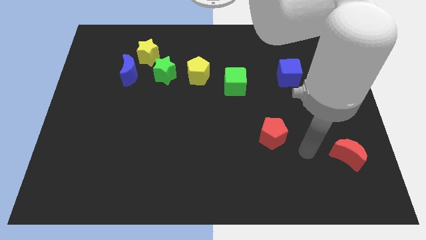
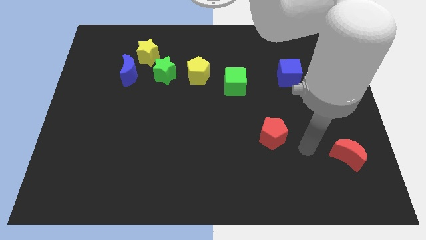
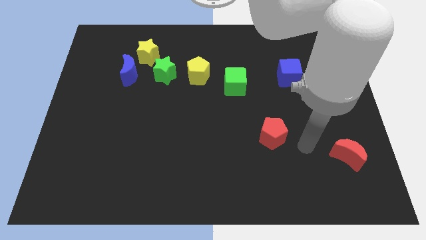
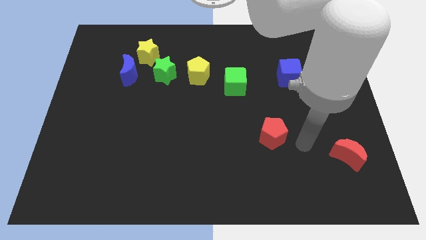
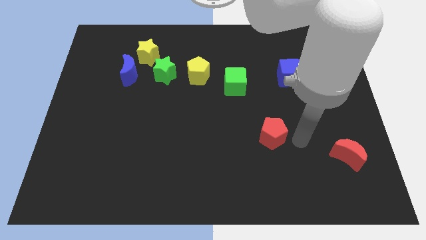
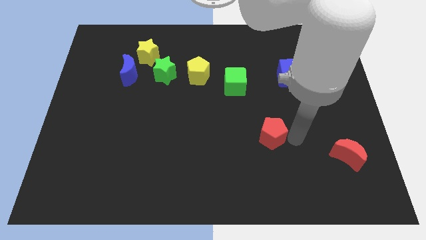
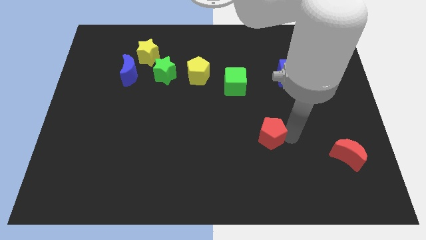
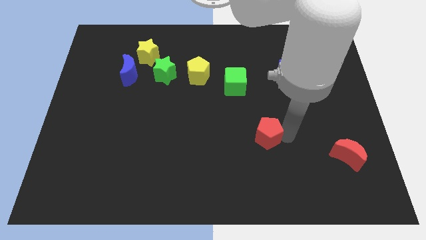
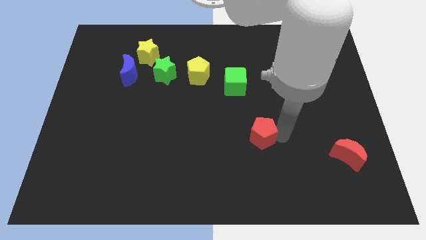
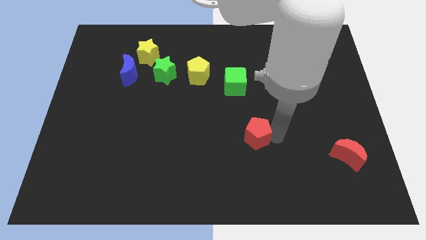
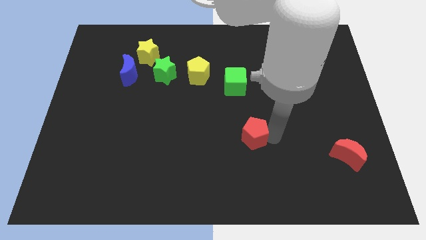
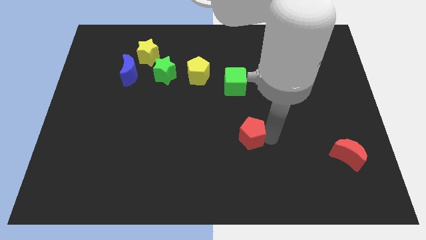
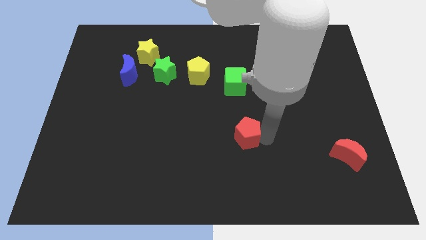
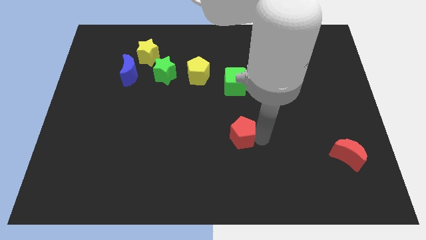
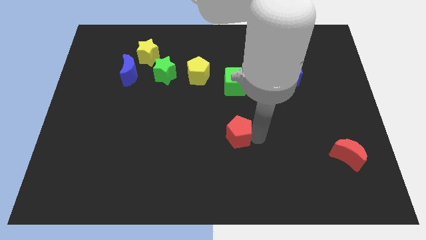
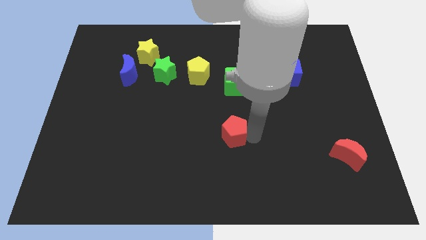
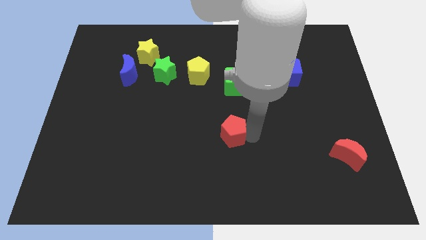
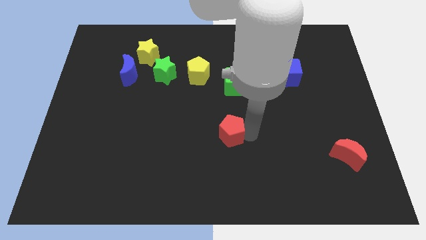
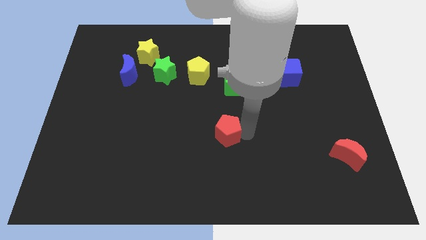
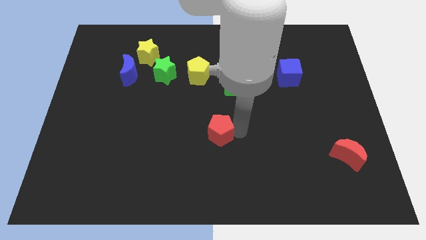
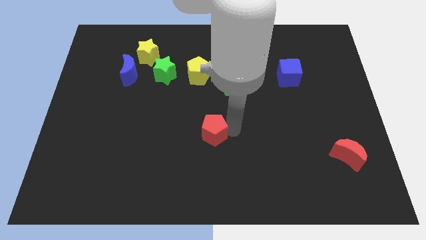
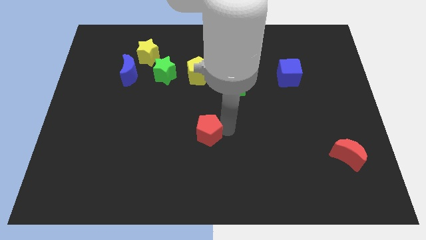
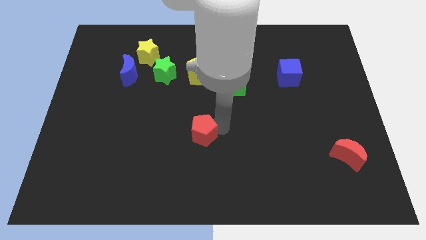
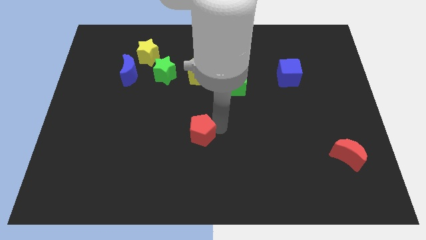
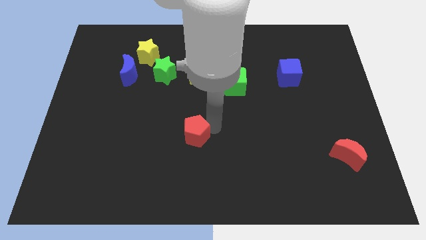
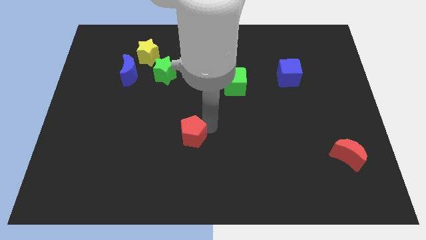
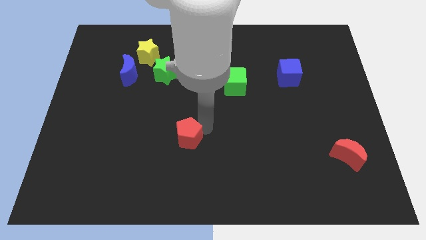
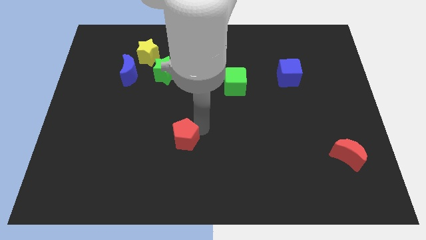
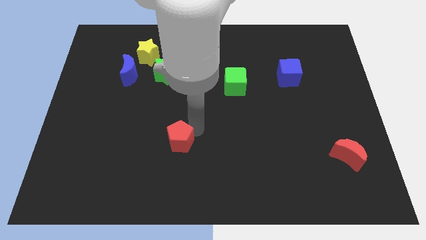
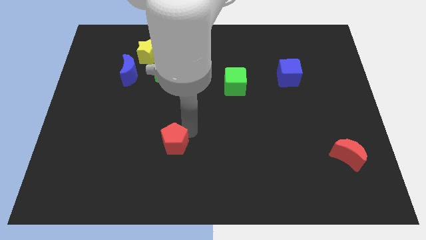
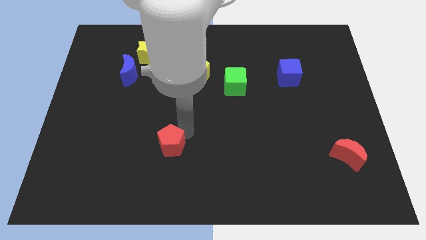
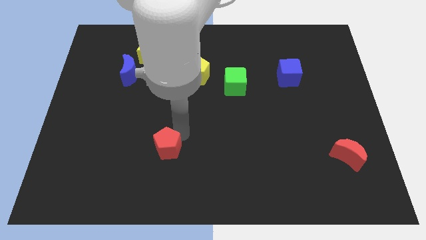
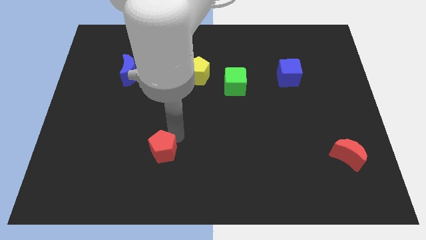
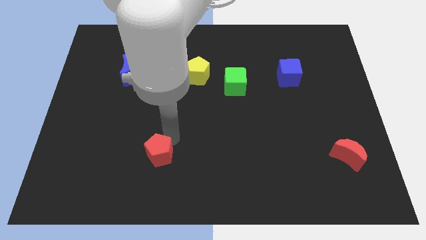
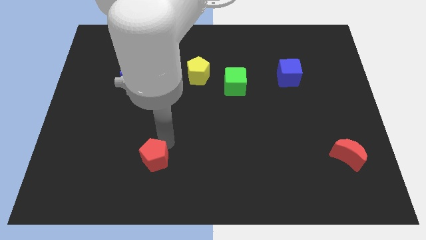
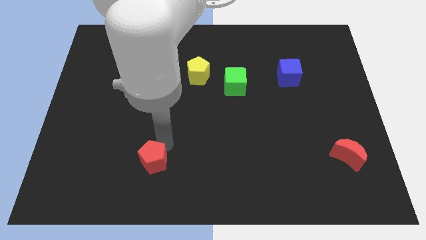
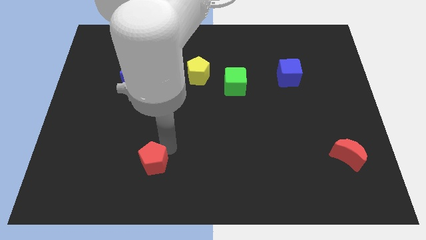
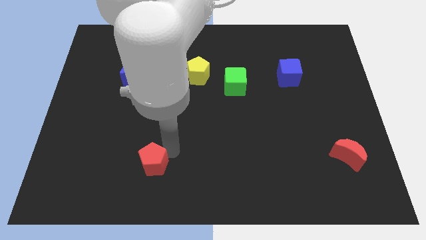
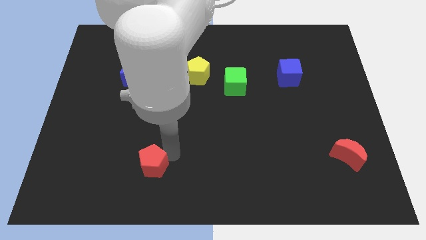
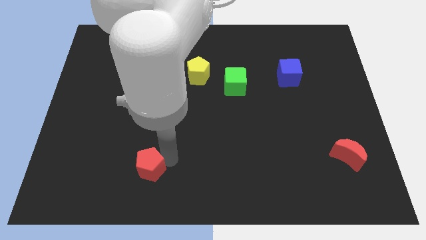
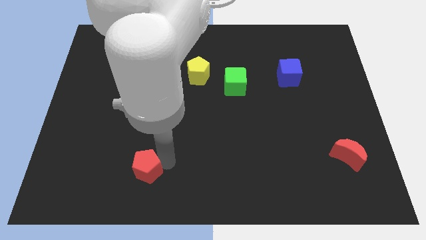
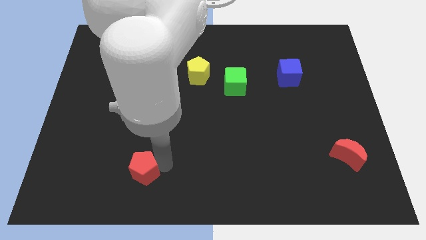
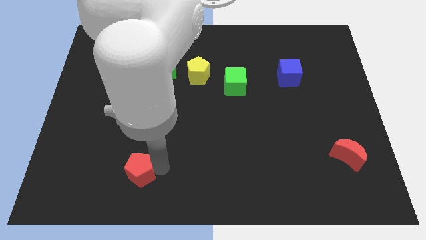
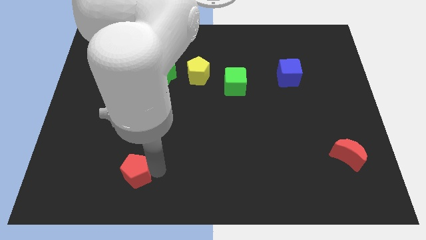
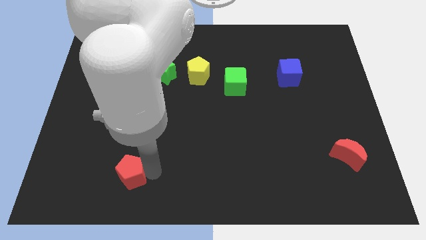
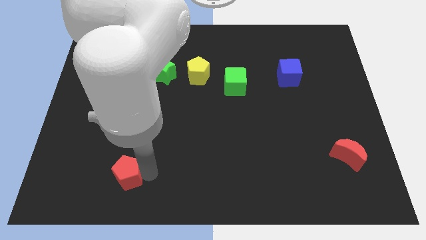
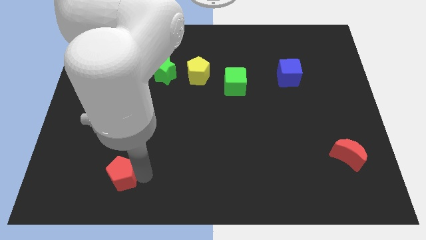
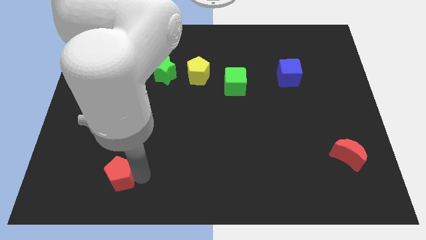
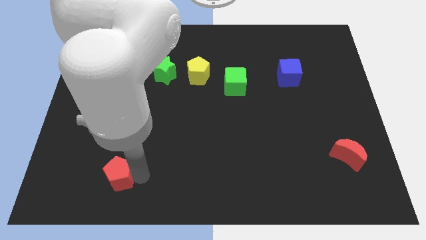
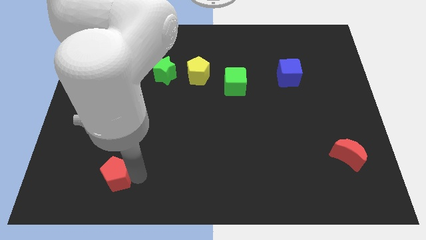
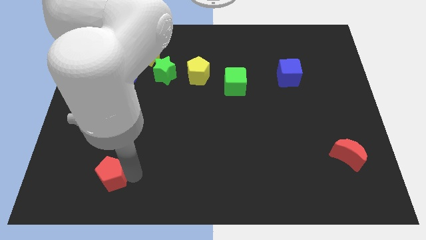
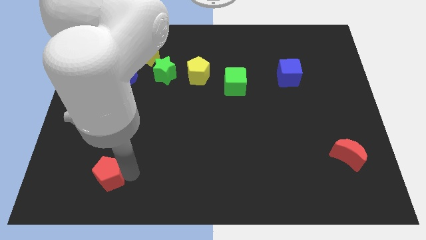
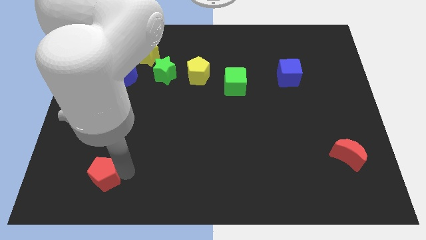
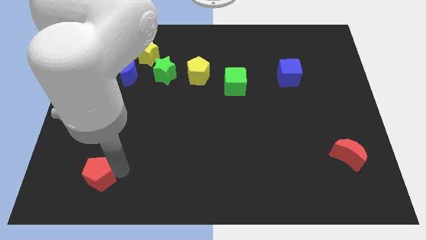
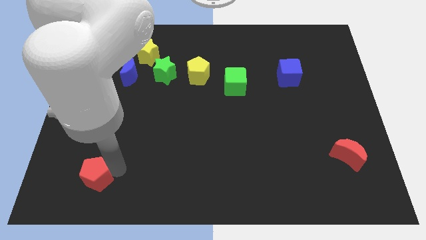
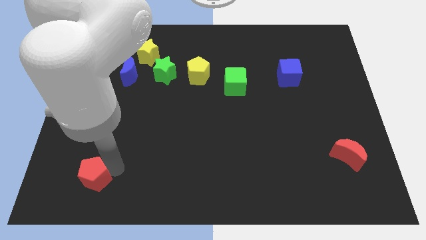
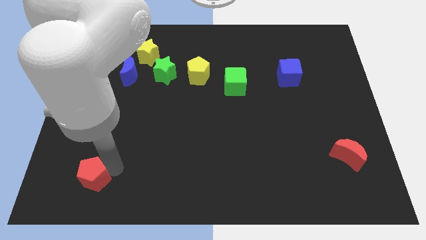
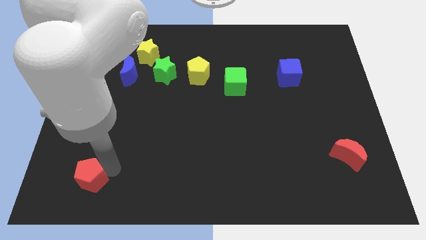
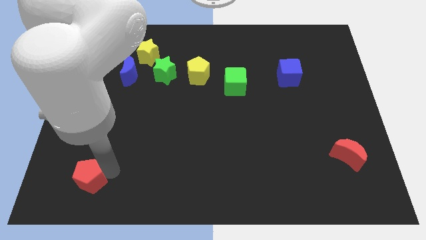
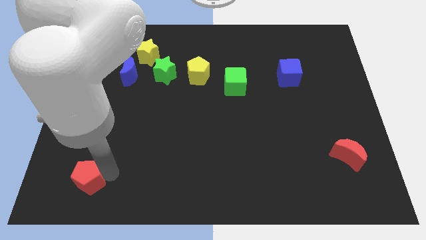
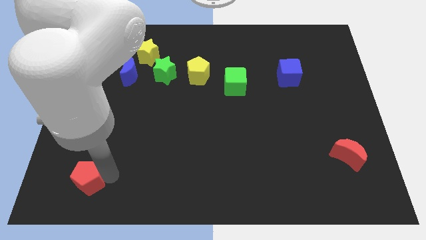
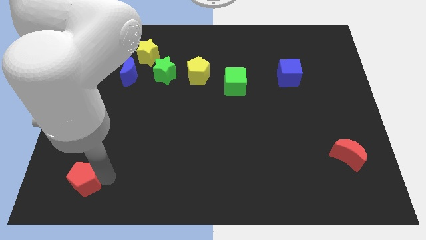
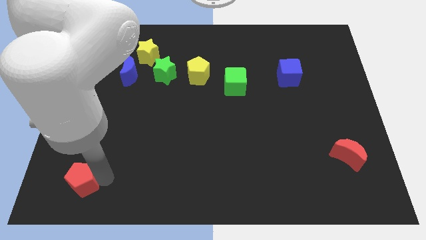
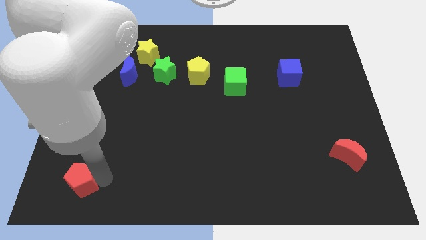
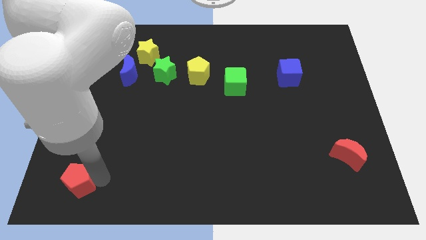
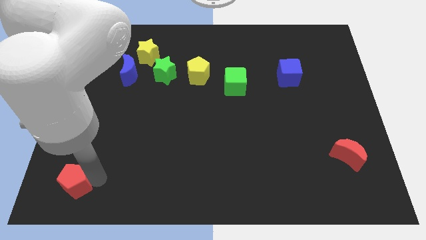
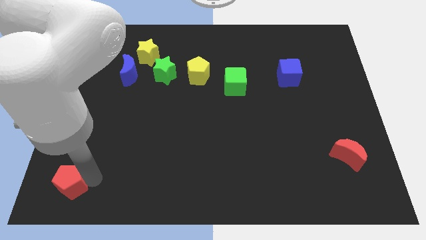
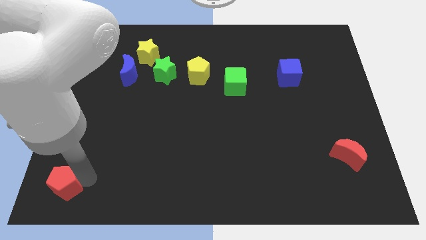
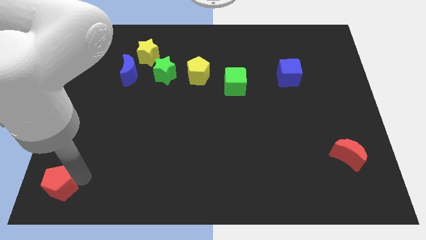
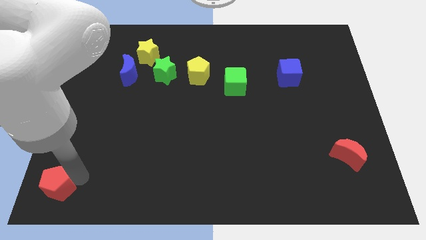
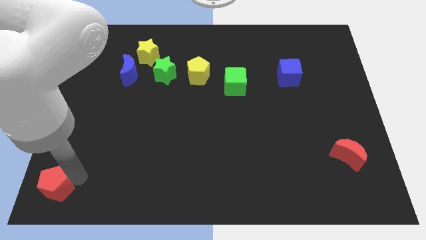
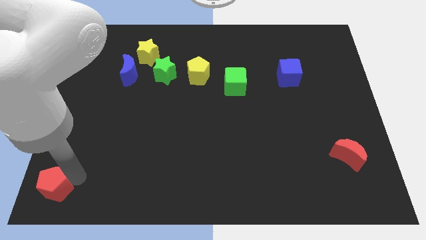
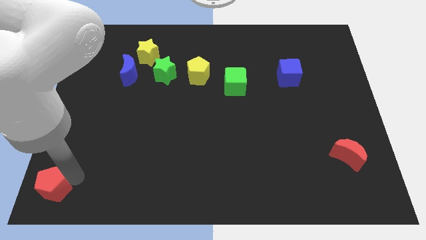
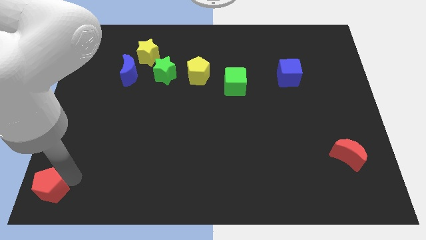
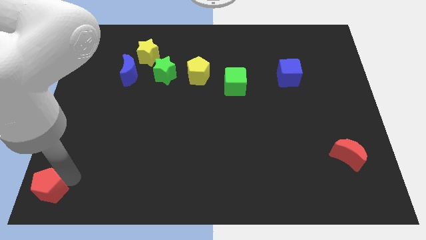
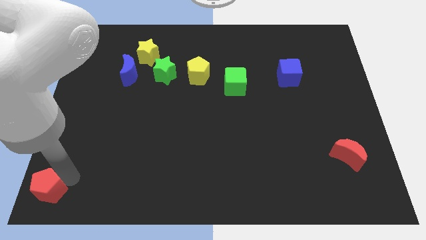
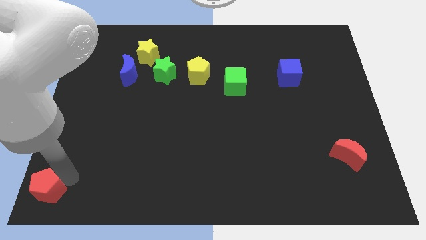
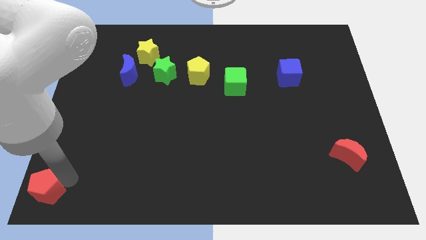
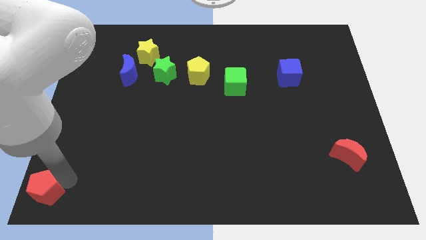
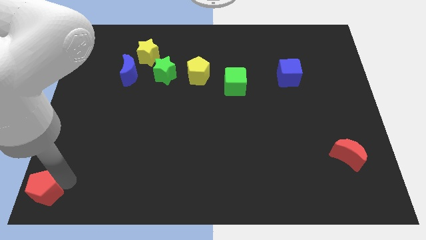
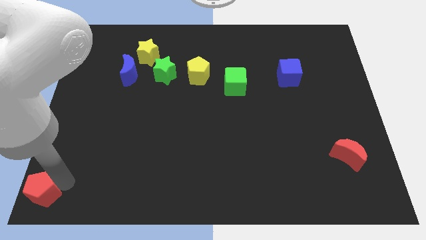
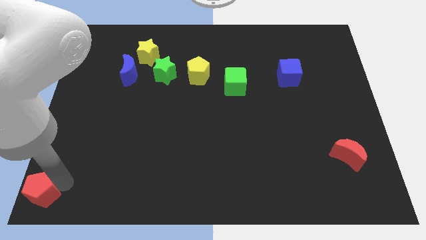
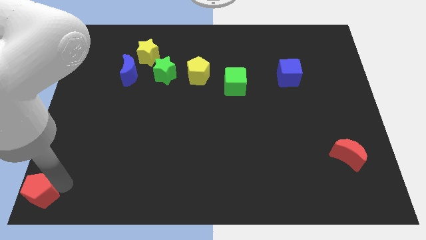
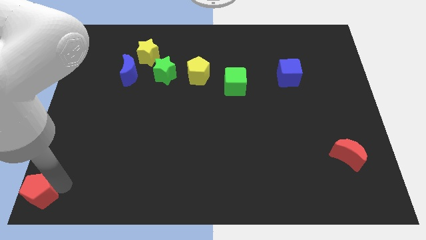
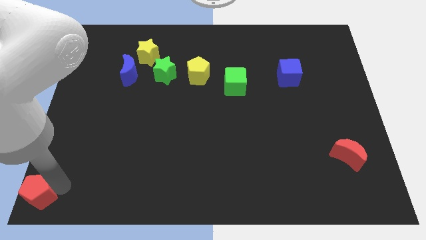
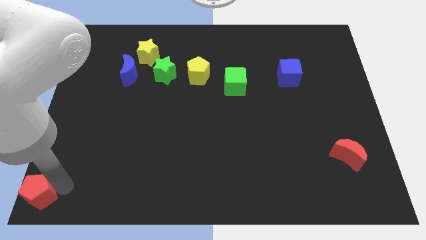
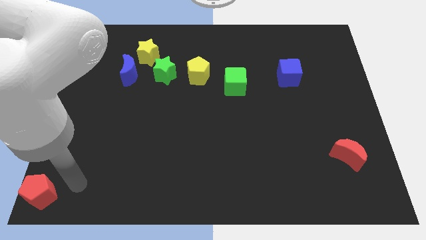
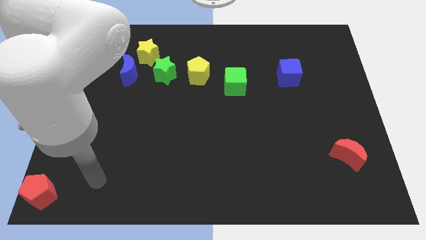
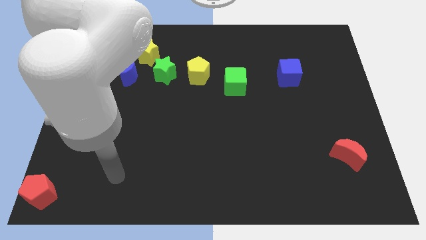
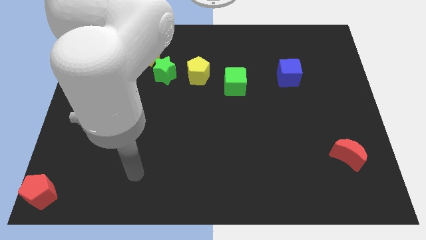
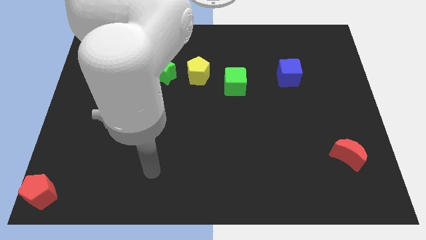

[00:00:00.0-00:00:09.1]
push the red pentagon to the bottom left corner of the board
